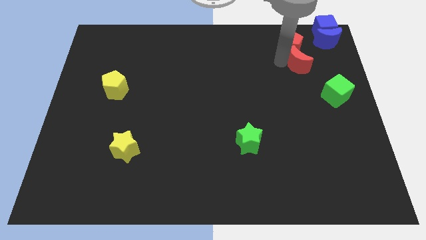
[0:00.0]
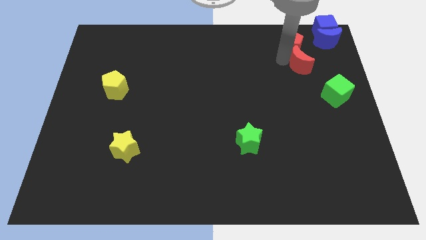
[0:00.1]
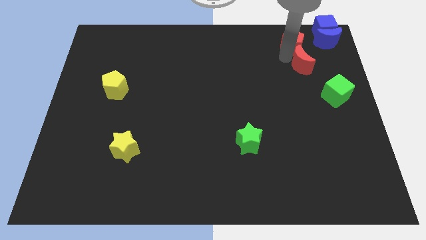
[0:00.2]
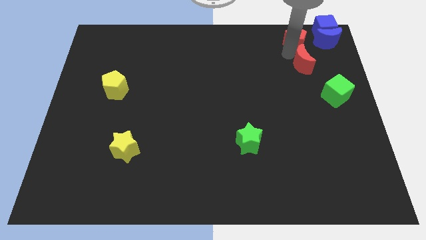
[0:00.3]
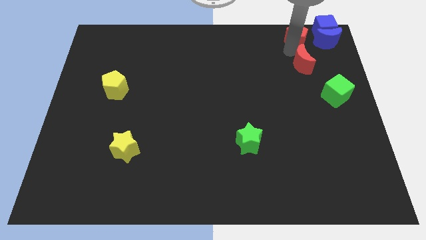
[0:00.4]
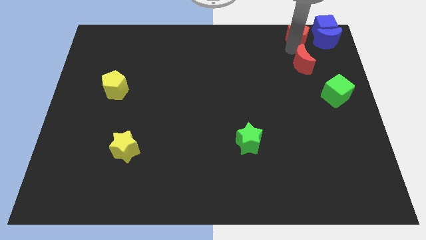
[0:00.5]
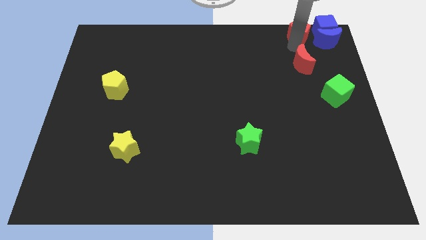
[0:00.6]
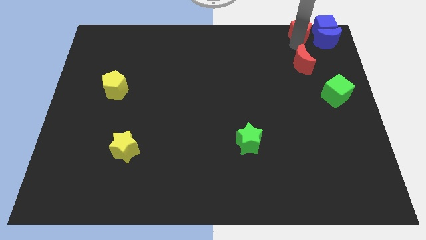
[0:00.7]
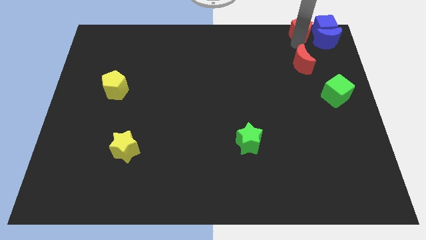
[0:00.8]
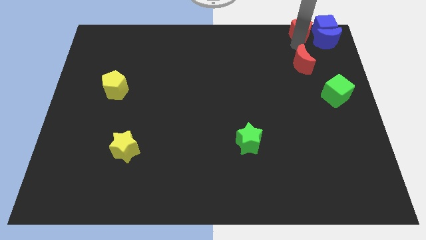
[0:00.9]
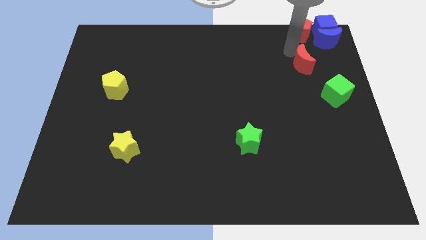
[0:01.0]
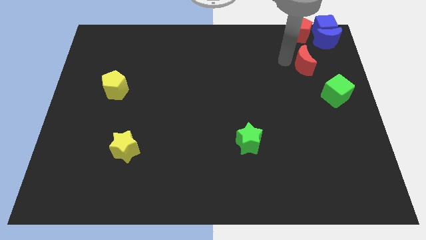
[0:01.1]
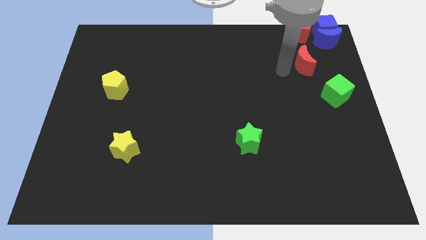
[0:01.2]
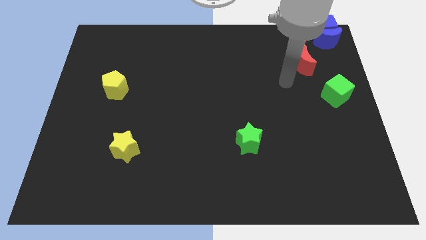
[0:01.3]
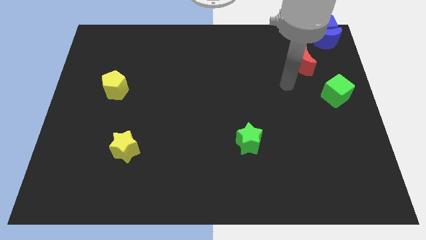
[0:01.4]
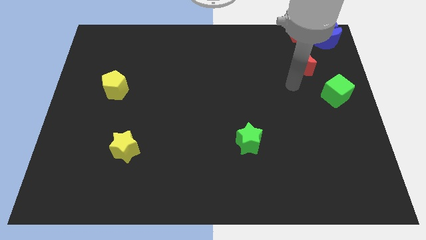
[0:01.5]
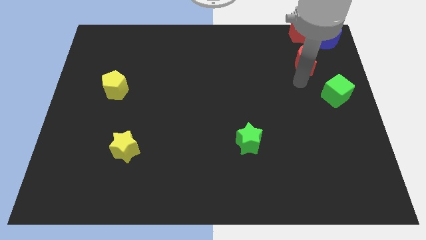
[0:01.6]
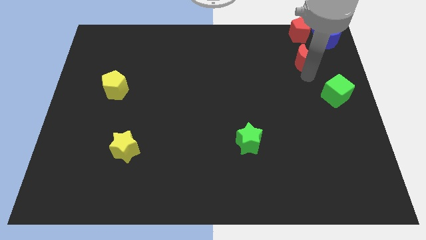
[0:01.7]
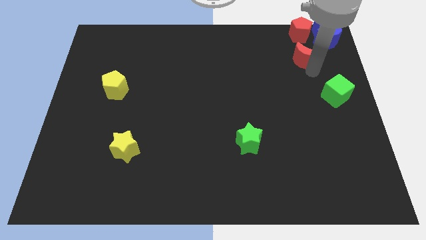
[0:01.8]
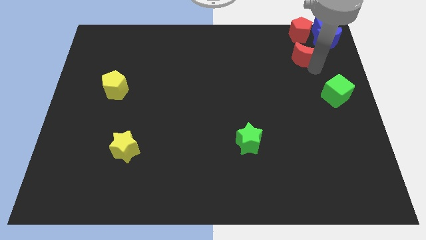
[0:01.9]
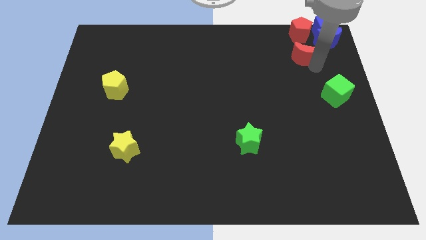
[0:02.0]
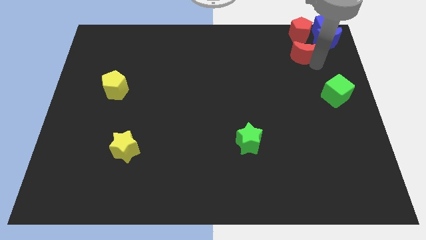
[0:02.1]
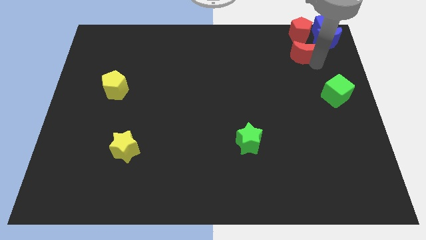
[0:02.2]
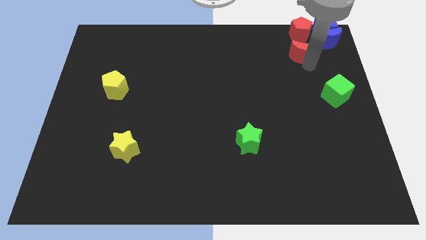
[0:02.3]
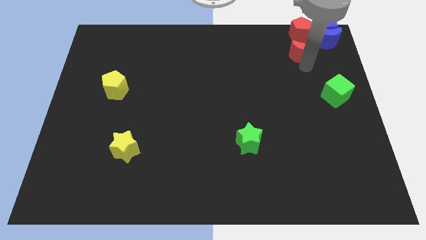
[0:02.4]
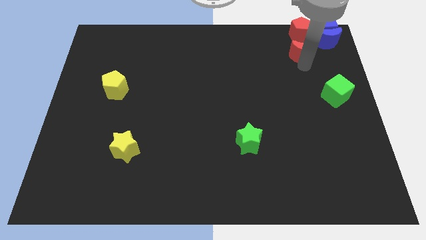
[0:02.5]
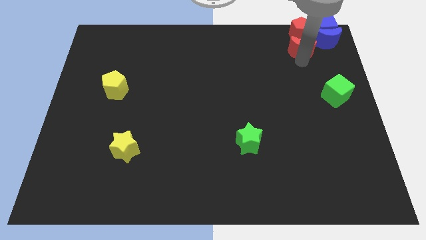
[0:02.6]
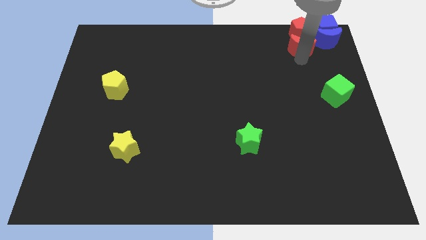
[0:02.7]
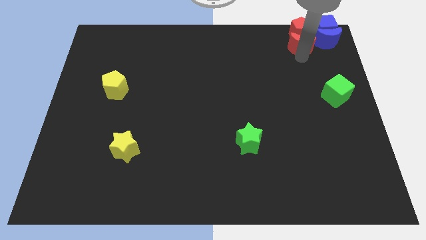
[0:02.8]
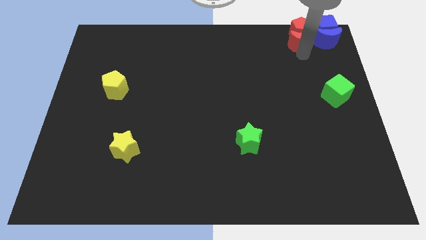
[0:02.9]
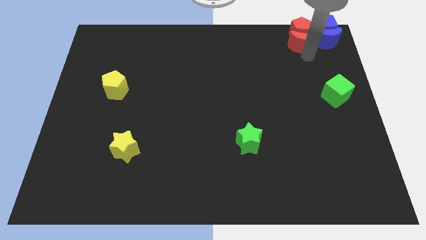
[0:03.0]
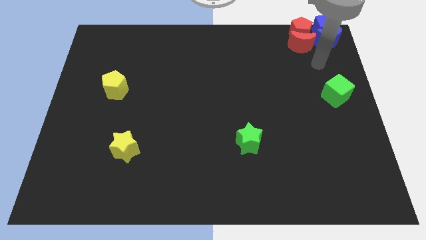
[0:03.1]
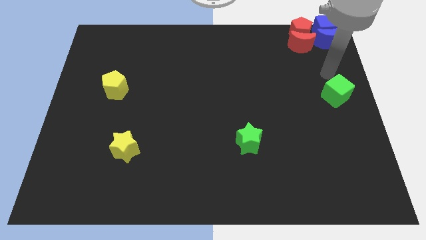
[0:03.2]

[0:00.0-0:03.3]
place red blocks near blue blocks

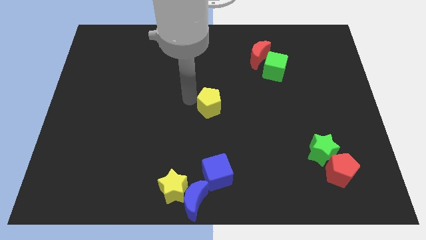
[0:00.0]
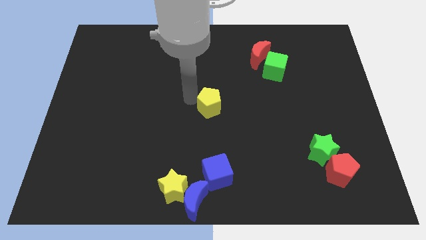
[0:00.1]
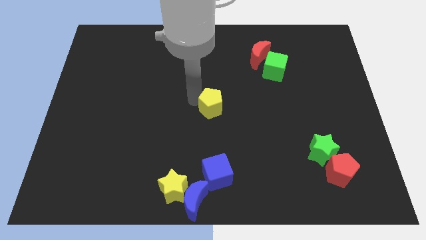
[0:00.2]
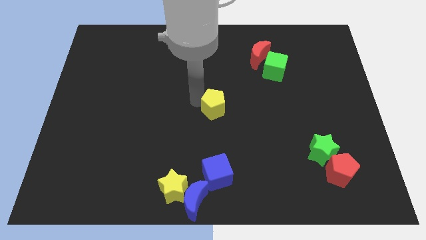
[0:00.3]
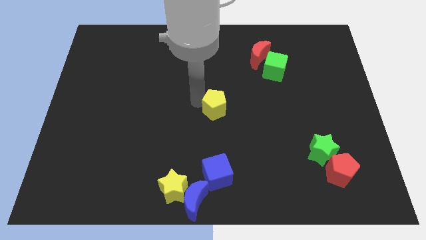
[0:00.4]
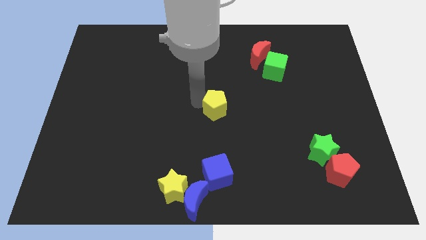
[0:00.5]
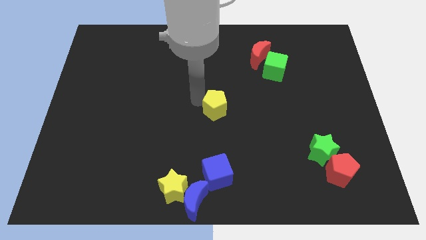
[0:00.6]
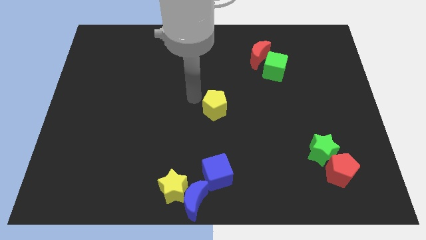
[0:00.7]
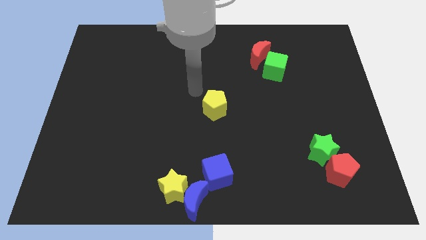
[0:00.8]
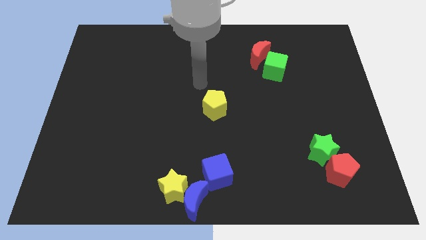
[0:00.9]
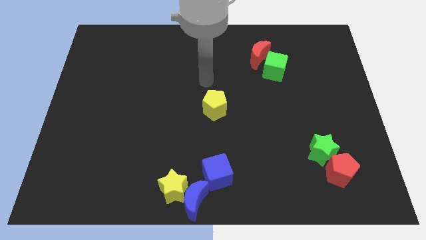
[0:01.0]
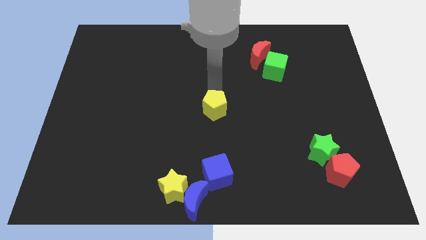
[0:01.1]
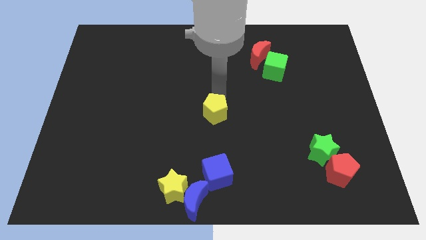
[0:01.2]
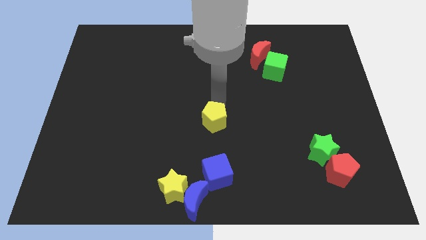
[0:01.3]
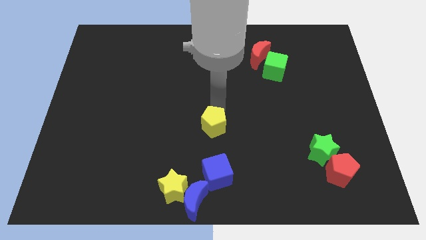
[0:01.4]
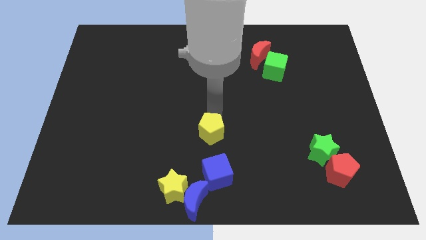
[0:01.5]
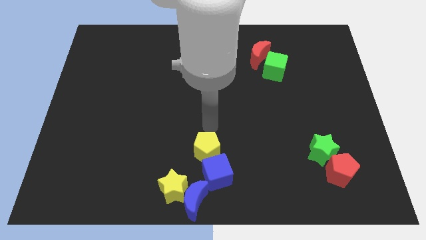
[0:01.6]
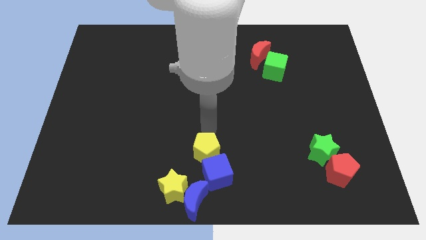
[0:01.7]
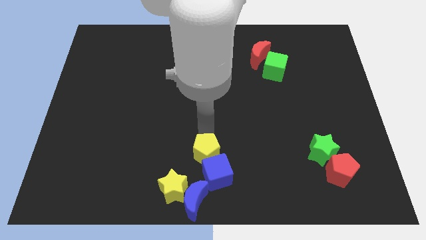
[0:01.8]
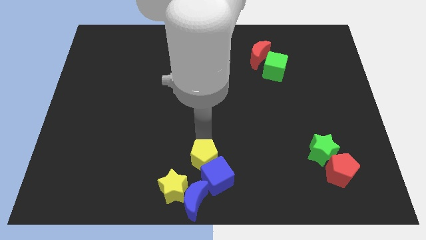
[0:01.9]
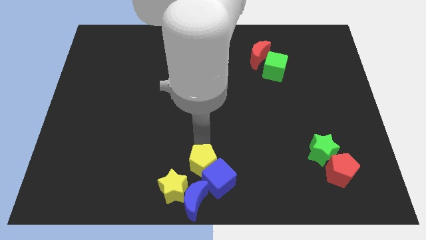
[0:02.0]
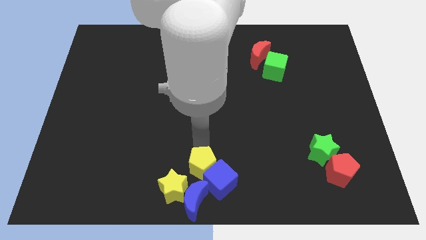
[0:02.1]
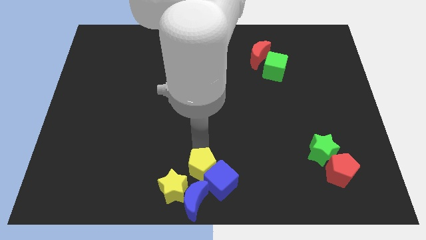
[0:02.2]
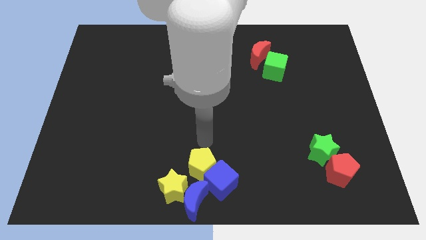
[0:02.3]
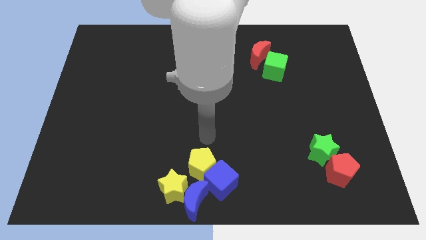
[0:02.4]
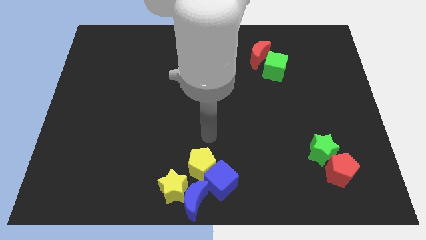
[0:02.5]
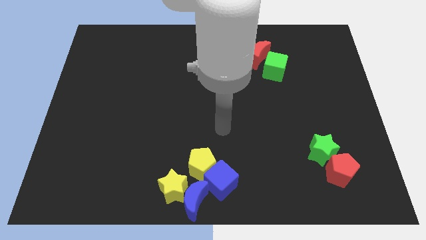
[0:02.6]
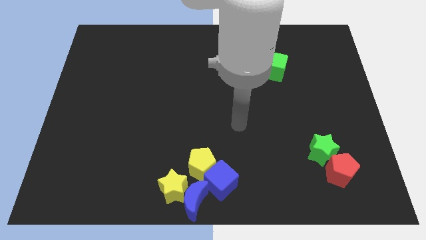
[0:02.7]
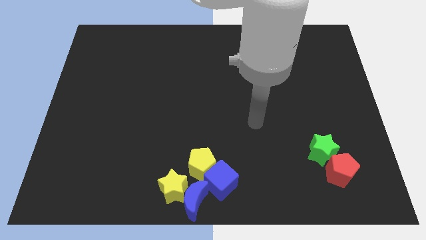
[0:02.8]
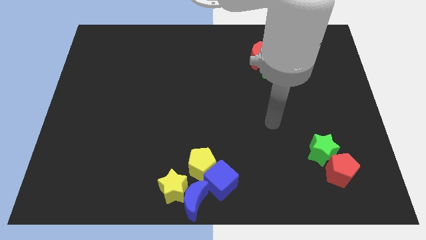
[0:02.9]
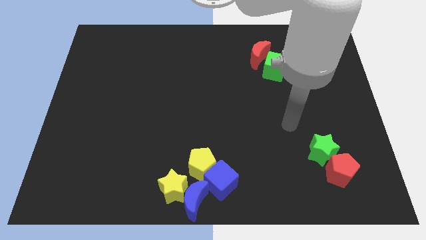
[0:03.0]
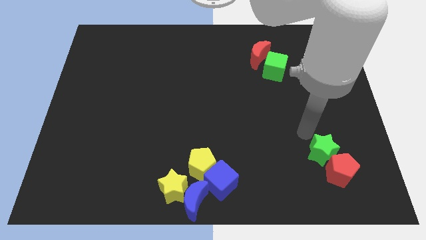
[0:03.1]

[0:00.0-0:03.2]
add the yellow pentagon to the group of blocks at the bottom center of the board

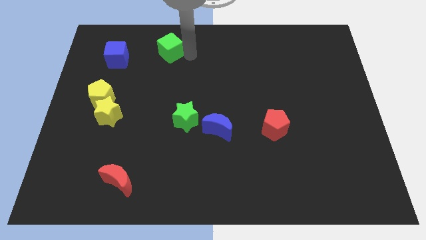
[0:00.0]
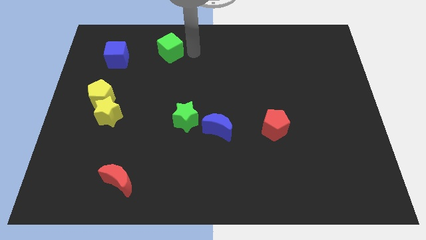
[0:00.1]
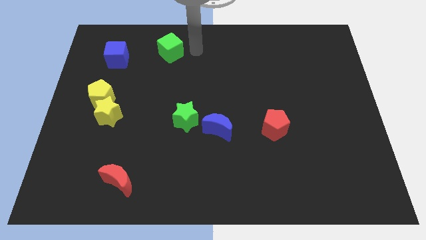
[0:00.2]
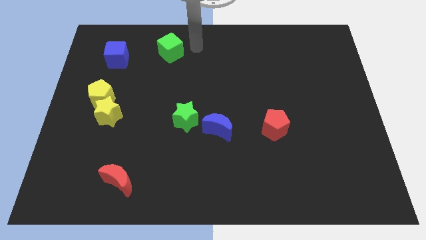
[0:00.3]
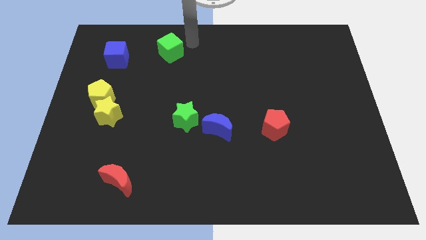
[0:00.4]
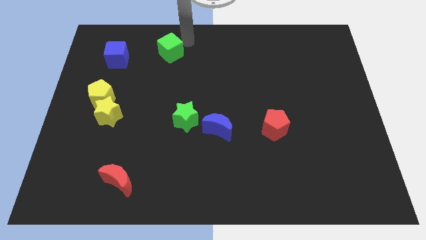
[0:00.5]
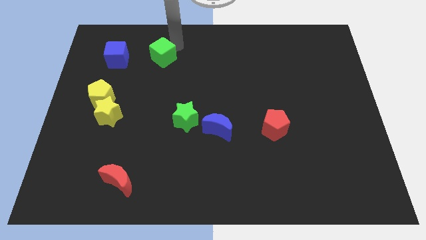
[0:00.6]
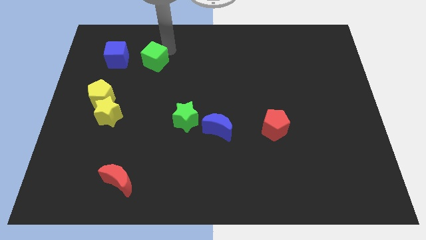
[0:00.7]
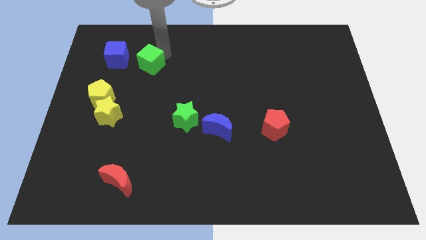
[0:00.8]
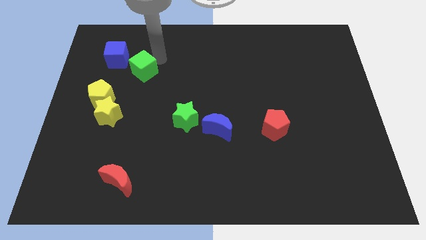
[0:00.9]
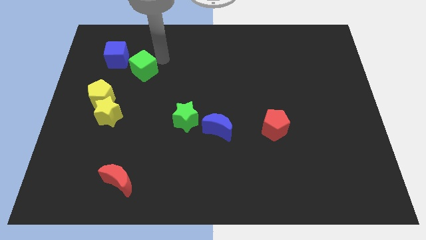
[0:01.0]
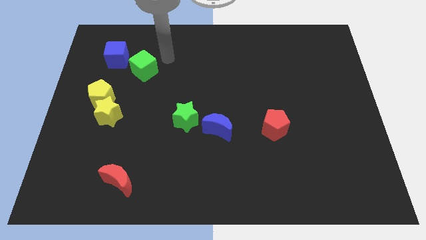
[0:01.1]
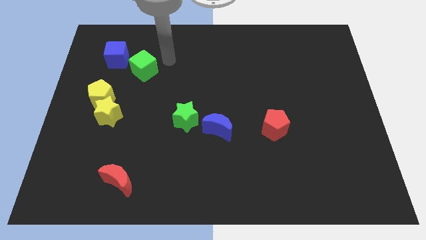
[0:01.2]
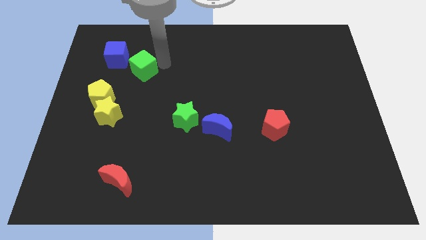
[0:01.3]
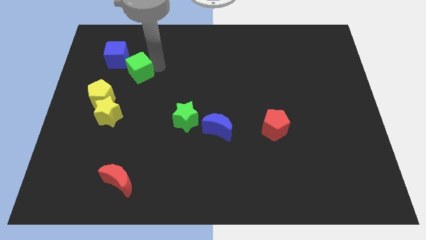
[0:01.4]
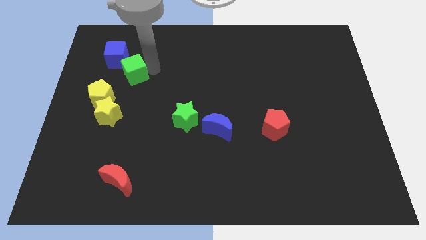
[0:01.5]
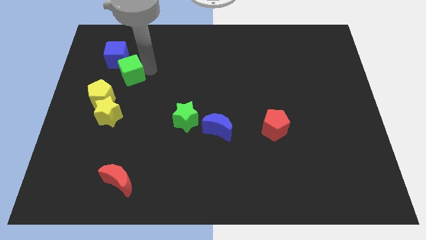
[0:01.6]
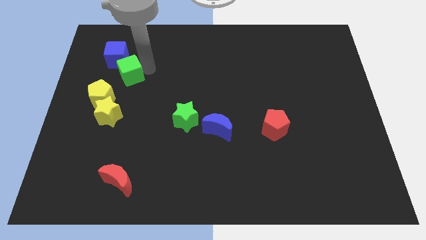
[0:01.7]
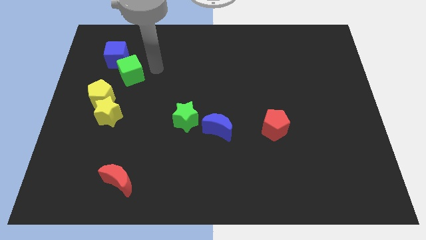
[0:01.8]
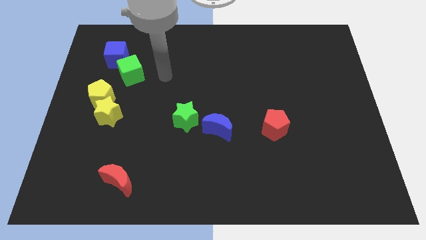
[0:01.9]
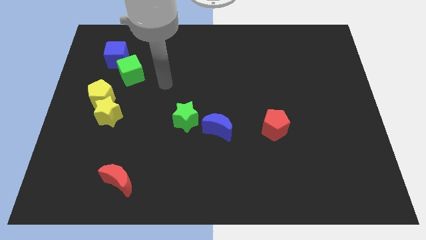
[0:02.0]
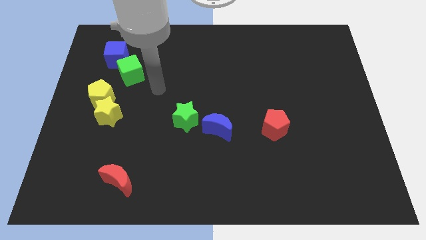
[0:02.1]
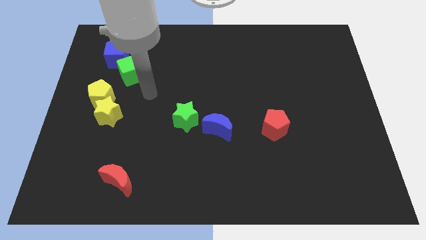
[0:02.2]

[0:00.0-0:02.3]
place the green cube below to the blue cube
